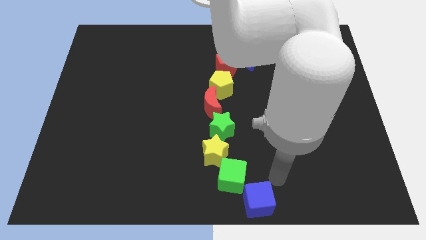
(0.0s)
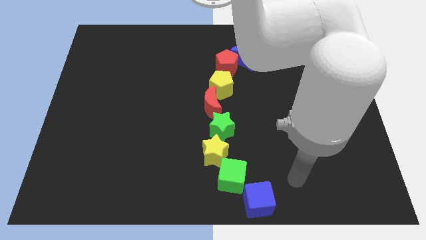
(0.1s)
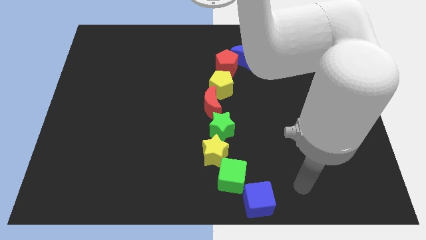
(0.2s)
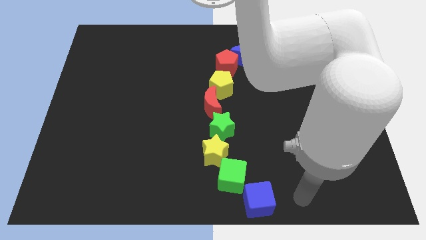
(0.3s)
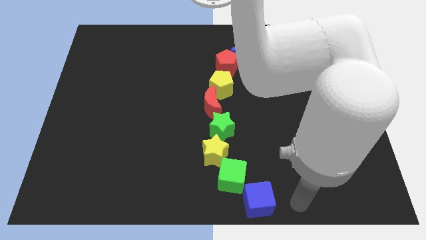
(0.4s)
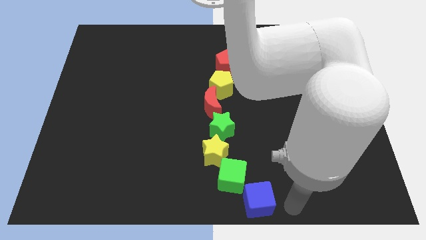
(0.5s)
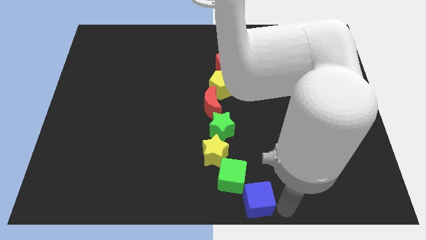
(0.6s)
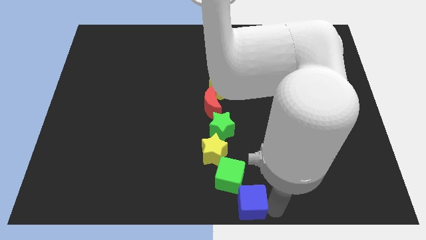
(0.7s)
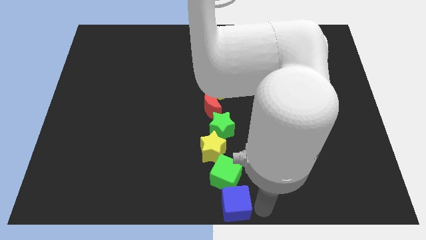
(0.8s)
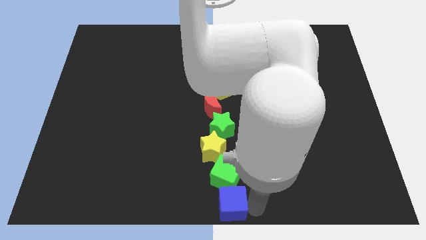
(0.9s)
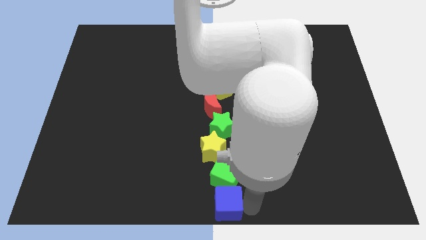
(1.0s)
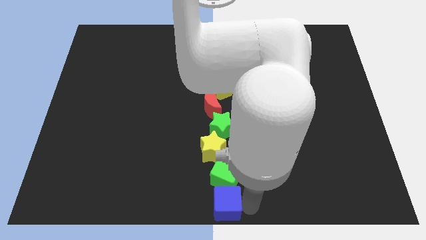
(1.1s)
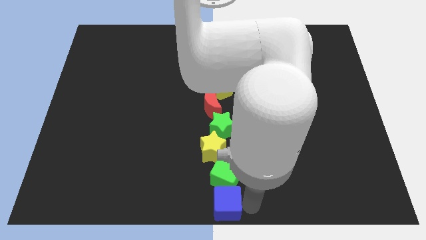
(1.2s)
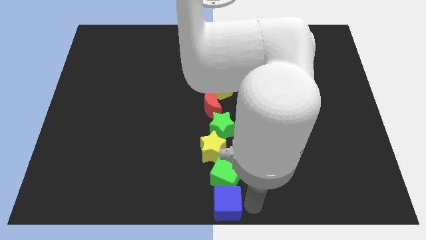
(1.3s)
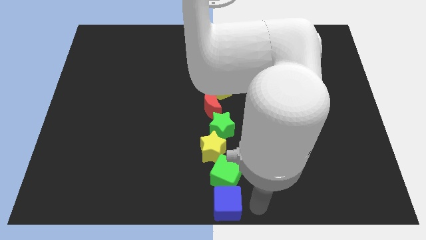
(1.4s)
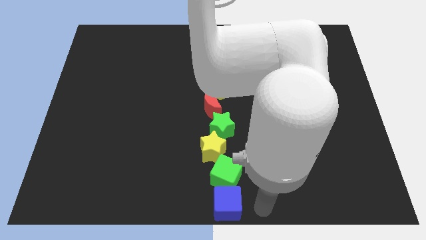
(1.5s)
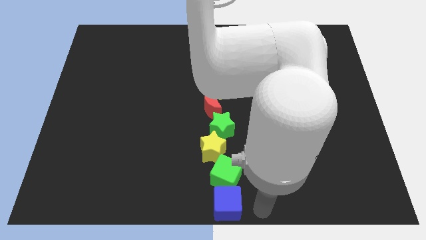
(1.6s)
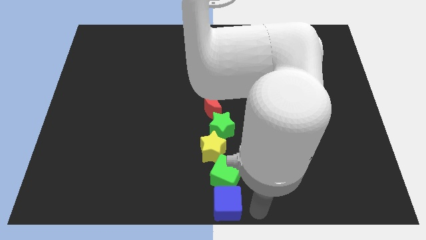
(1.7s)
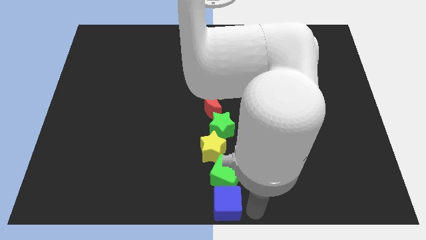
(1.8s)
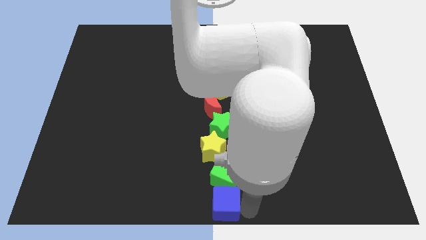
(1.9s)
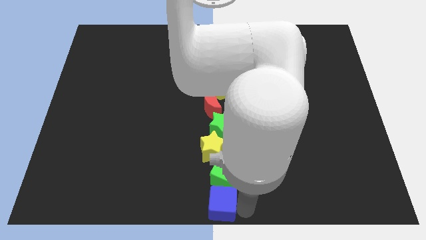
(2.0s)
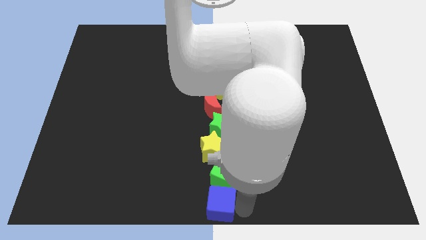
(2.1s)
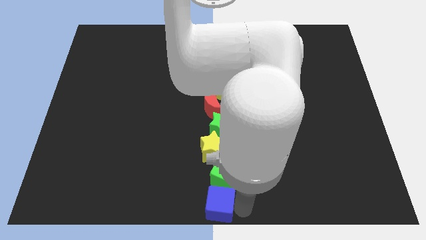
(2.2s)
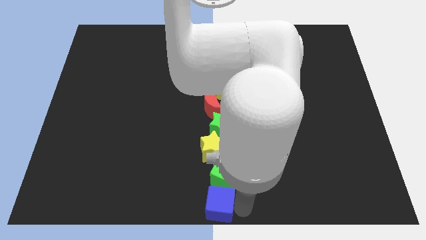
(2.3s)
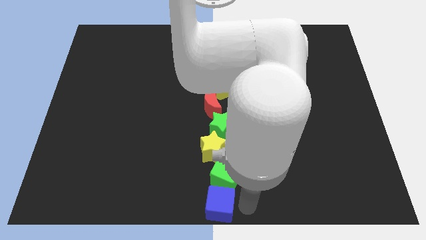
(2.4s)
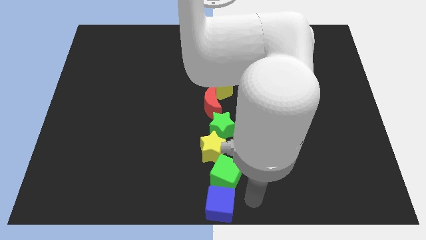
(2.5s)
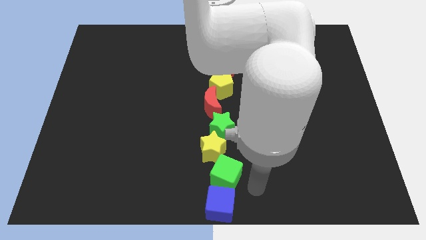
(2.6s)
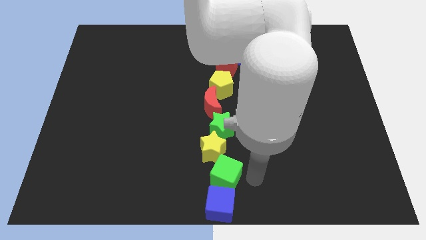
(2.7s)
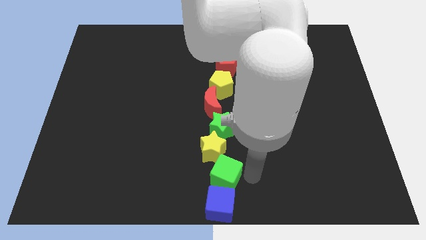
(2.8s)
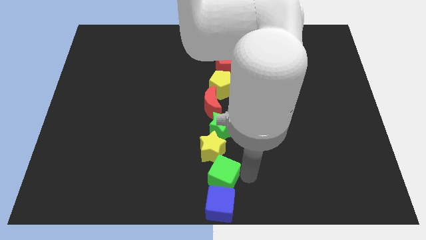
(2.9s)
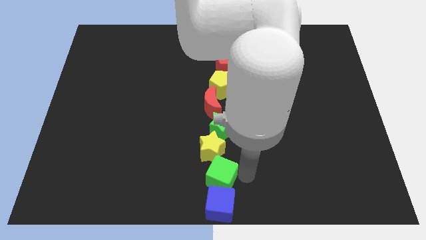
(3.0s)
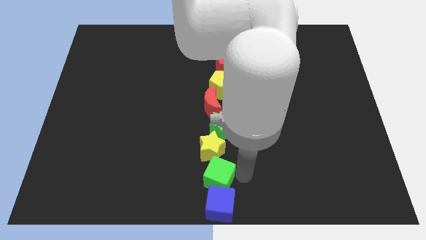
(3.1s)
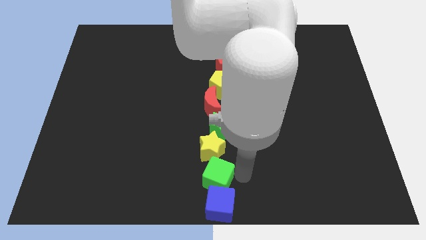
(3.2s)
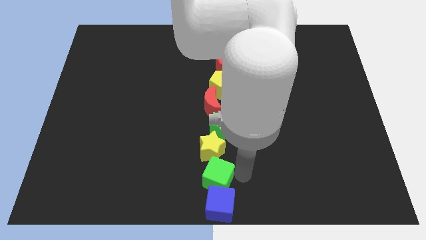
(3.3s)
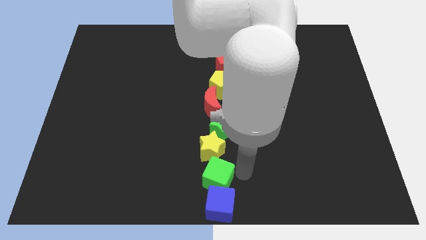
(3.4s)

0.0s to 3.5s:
adjust the cubes to form a line

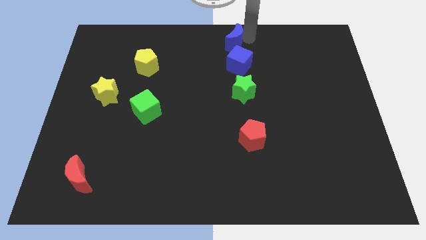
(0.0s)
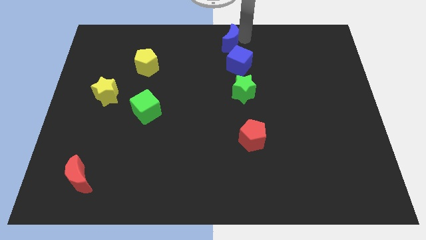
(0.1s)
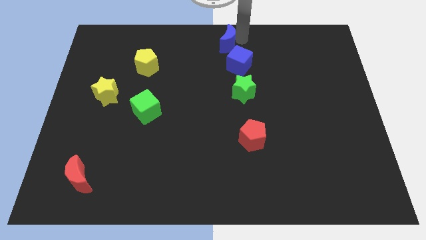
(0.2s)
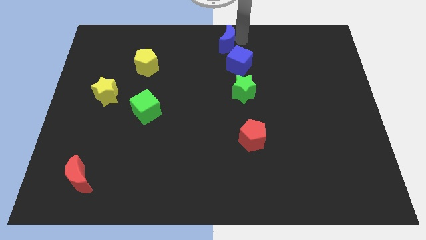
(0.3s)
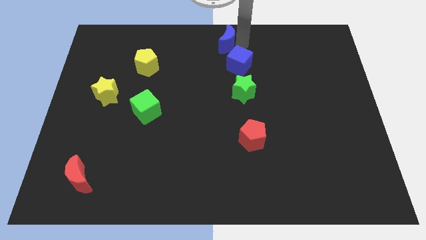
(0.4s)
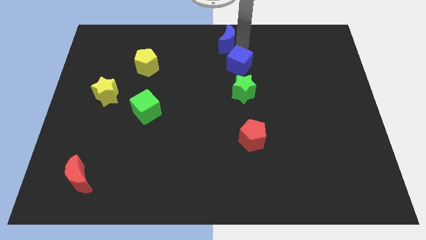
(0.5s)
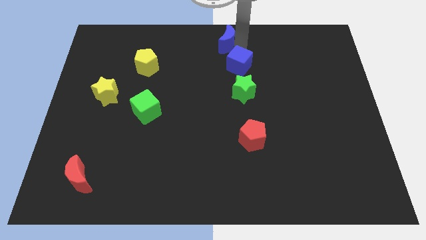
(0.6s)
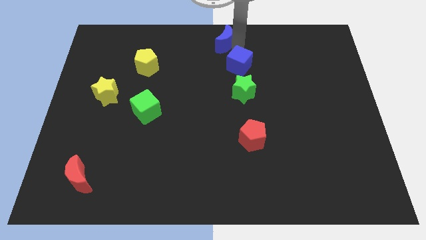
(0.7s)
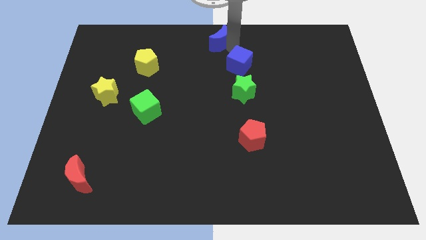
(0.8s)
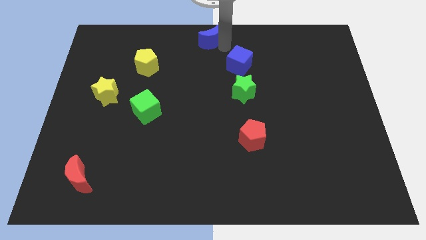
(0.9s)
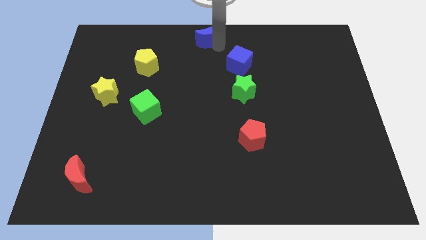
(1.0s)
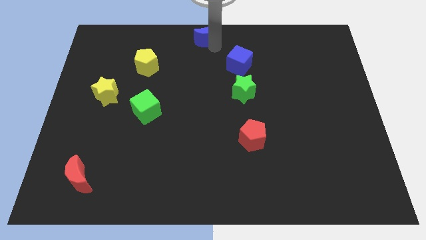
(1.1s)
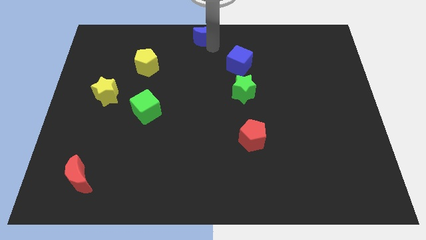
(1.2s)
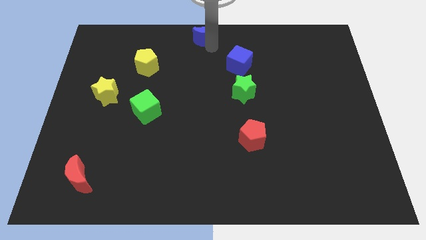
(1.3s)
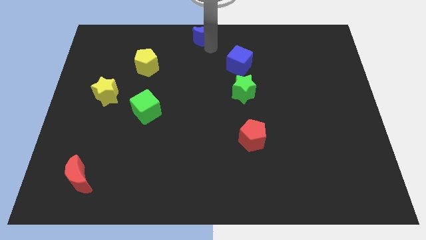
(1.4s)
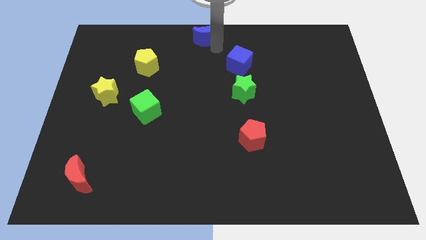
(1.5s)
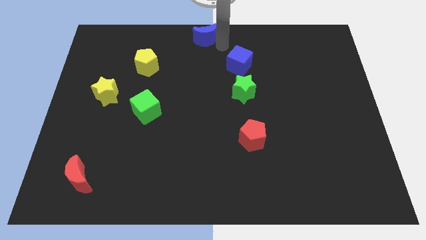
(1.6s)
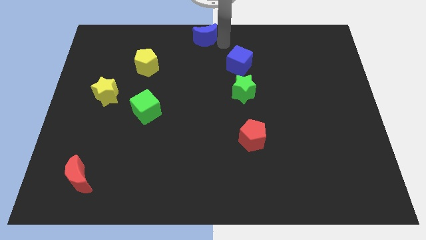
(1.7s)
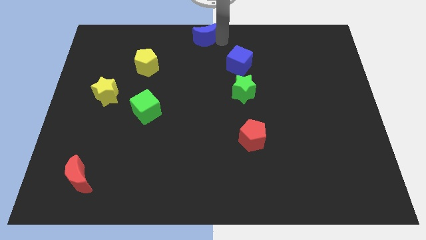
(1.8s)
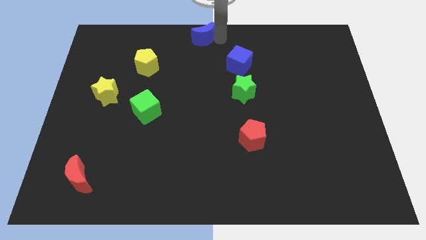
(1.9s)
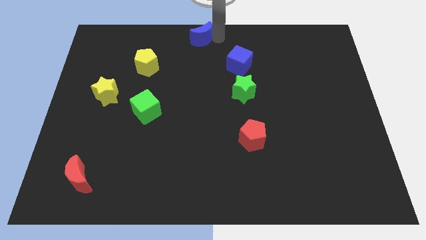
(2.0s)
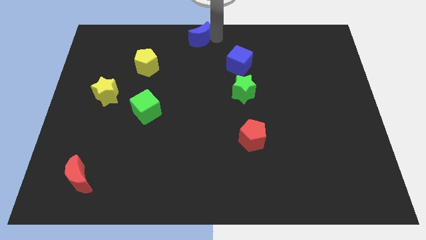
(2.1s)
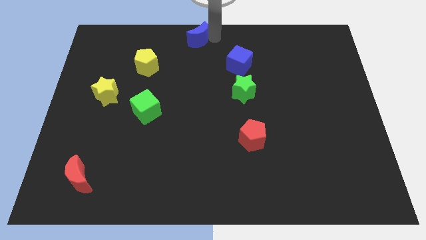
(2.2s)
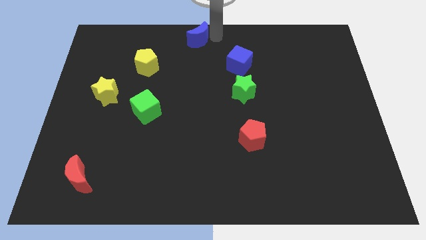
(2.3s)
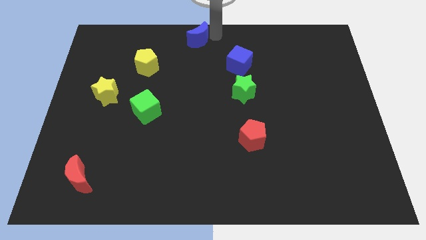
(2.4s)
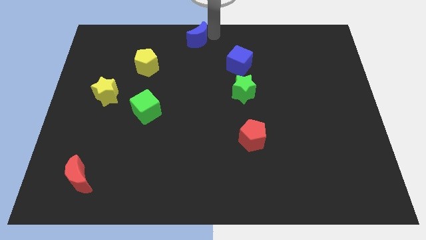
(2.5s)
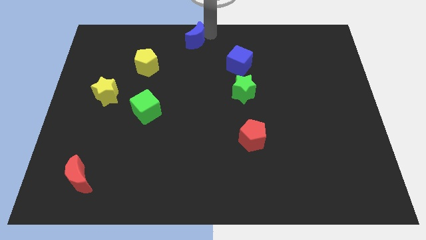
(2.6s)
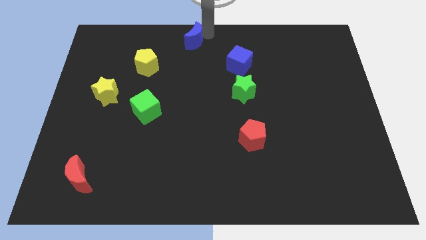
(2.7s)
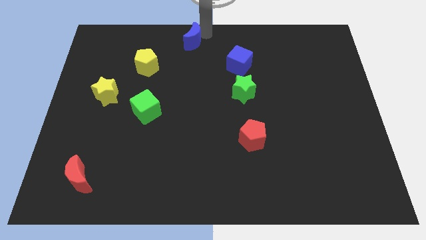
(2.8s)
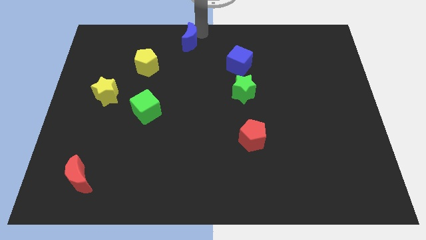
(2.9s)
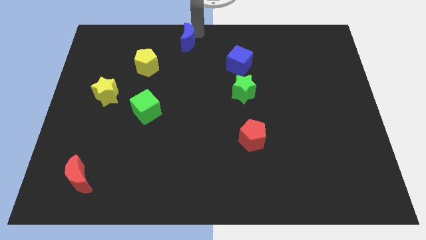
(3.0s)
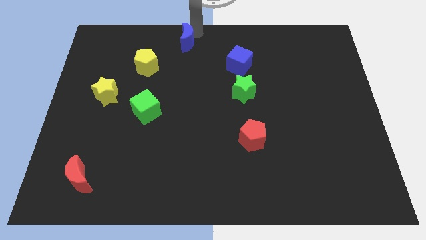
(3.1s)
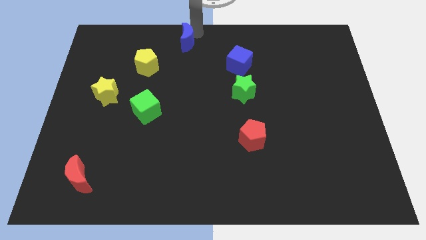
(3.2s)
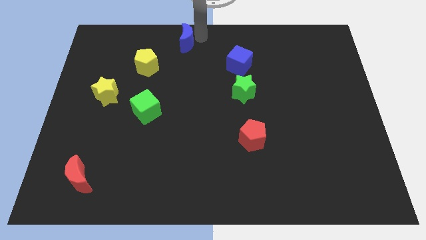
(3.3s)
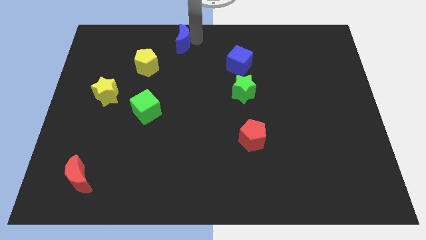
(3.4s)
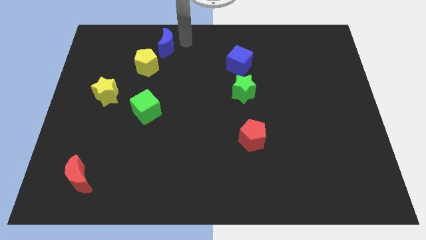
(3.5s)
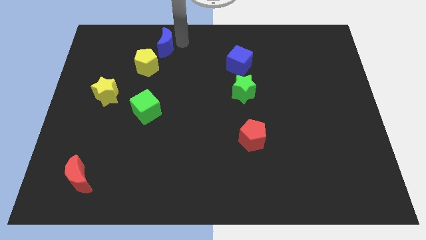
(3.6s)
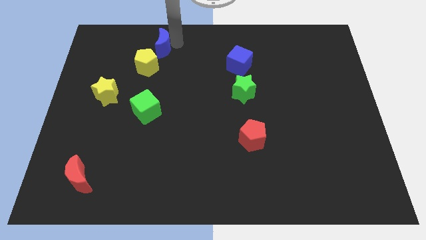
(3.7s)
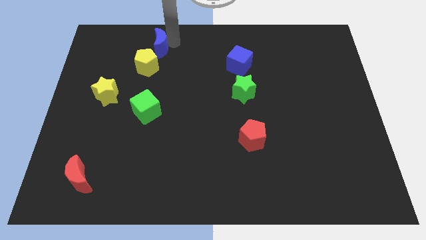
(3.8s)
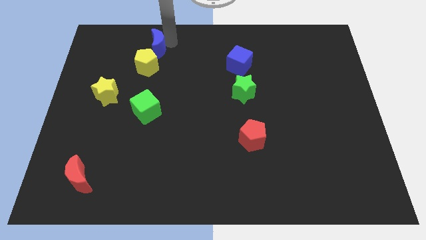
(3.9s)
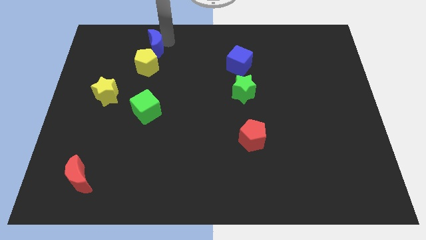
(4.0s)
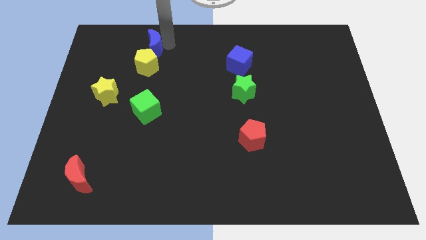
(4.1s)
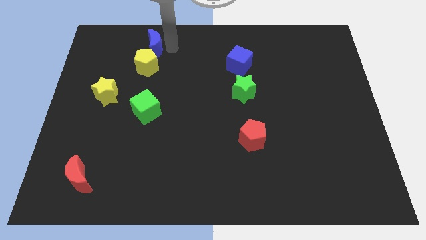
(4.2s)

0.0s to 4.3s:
move the blue crescent above the yellow pentagon

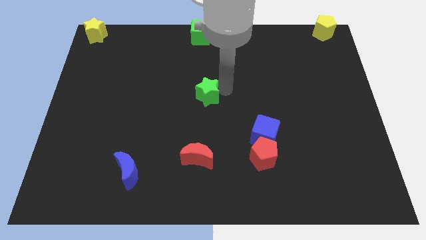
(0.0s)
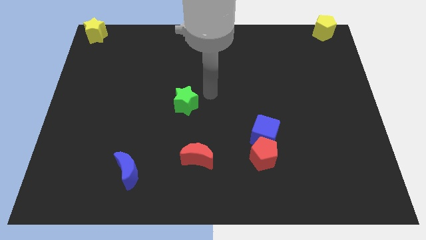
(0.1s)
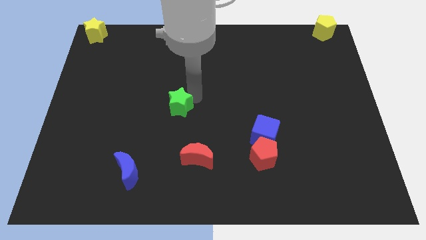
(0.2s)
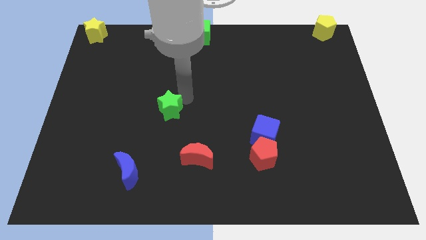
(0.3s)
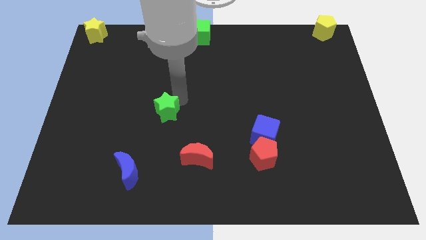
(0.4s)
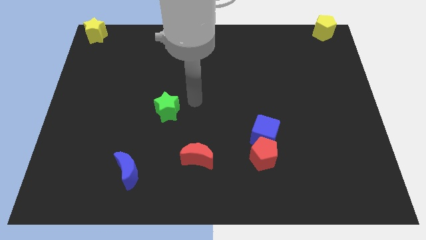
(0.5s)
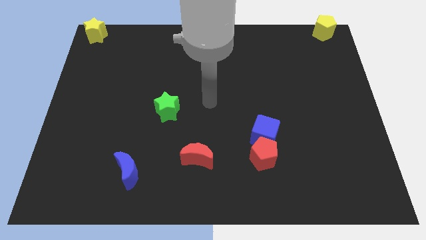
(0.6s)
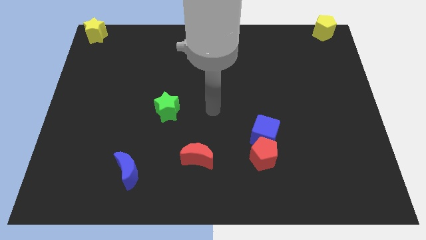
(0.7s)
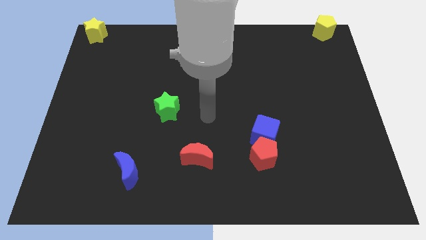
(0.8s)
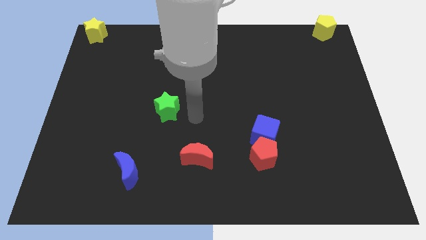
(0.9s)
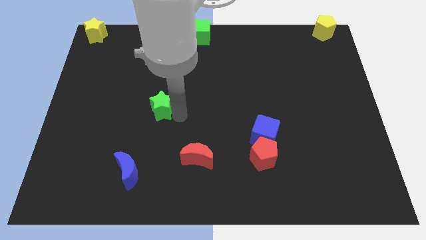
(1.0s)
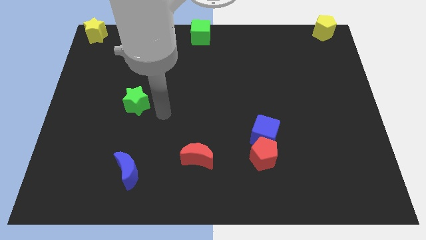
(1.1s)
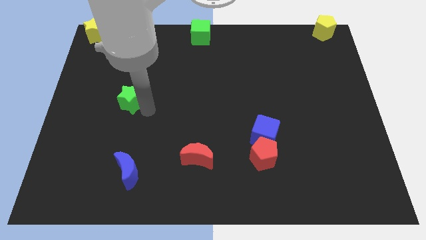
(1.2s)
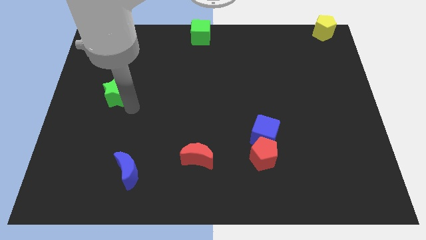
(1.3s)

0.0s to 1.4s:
push the green star to the vertical top side of the blue moon
